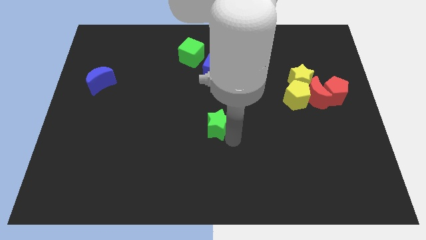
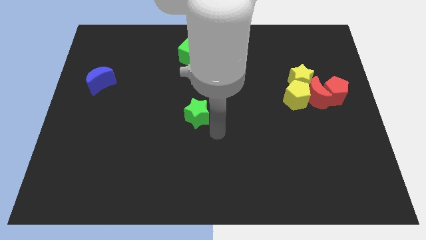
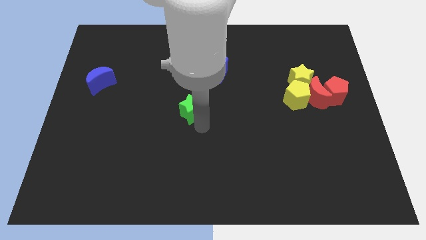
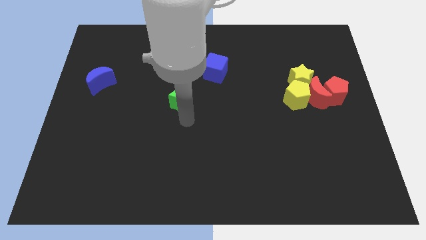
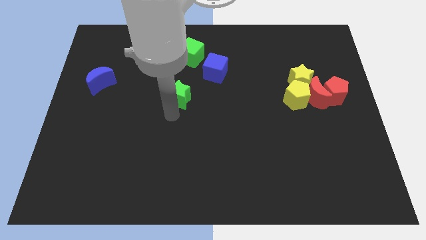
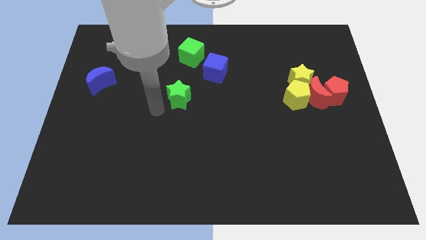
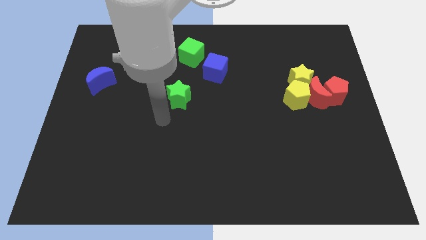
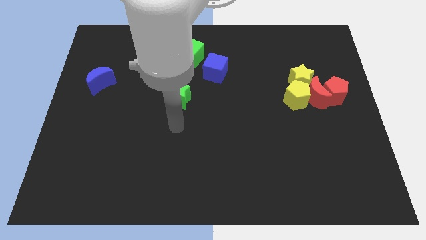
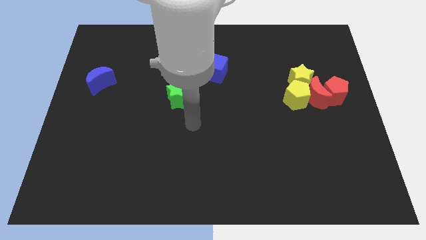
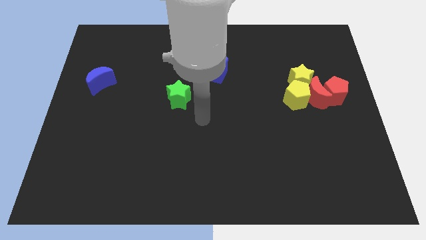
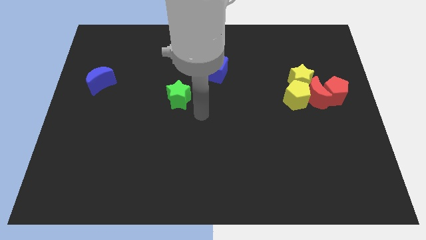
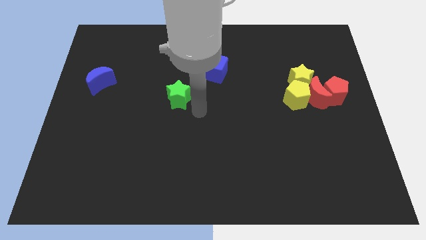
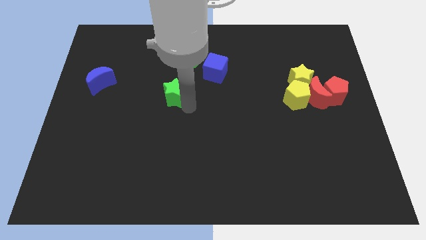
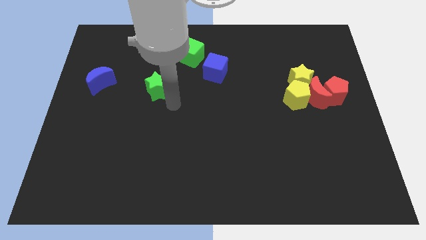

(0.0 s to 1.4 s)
move the green star to the green cube

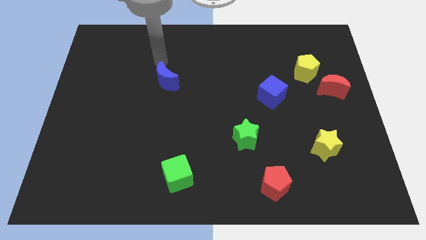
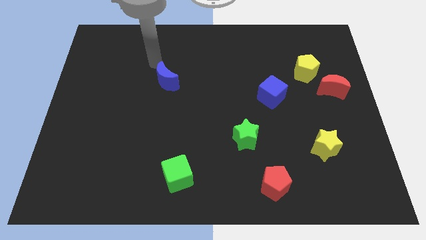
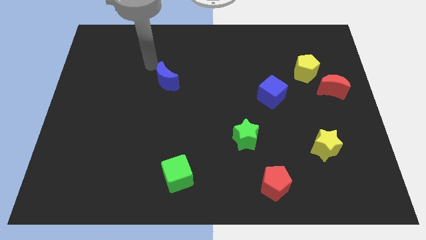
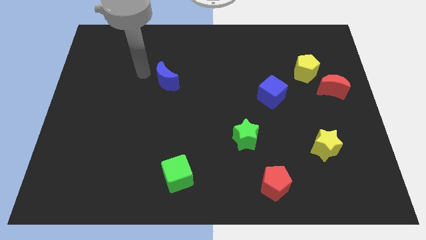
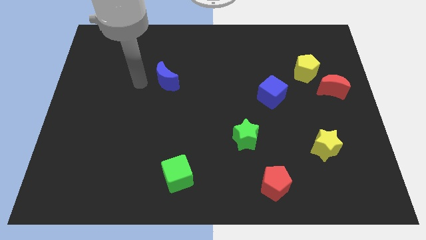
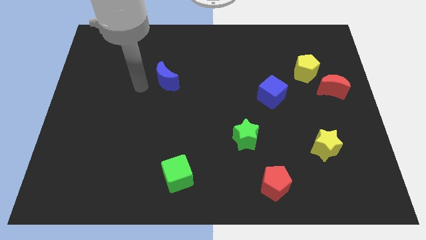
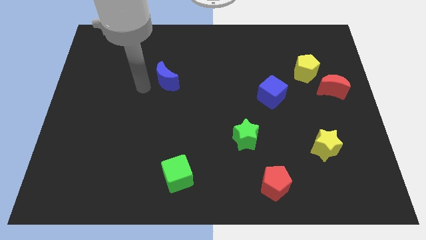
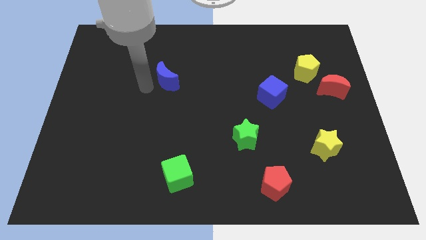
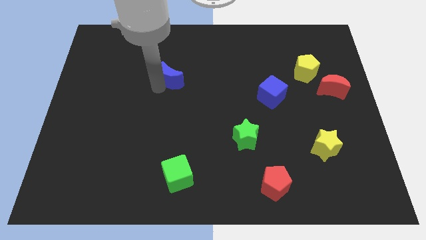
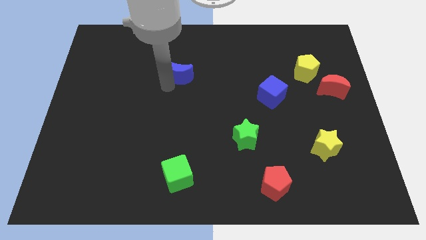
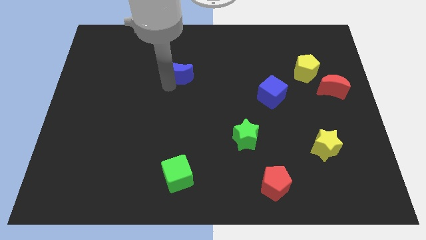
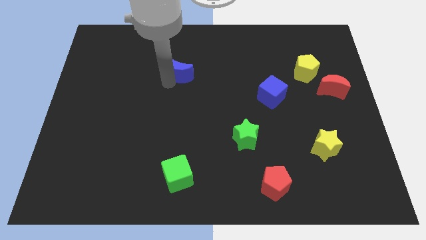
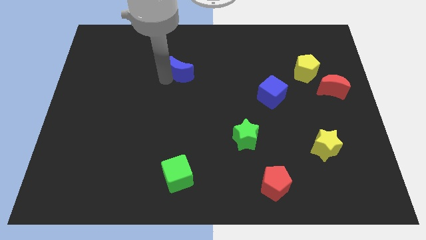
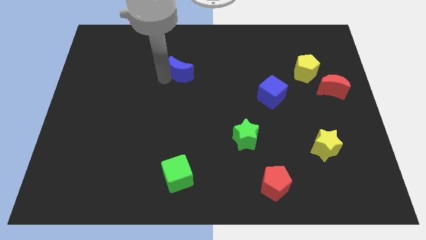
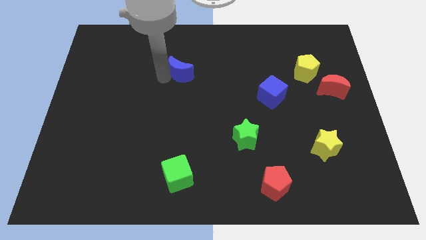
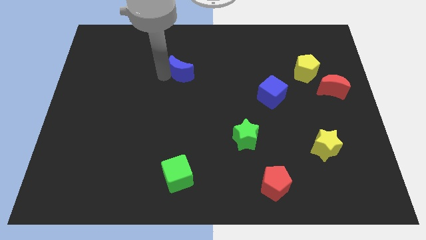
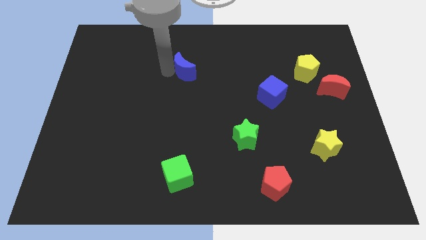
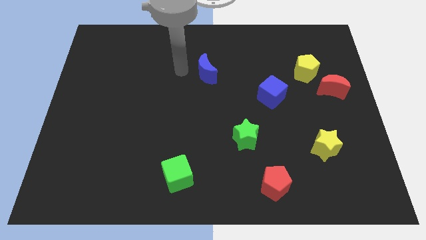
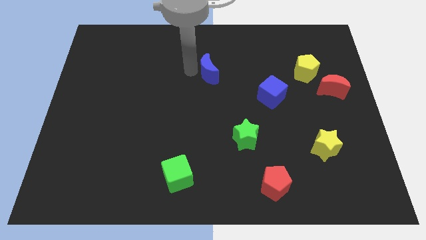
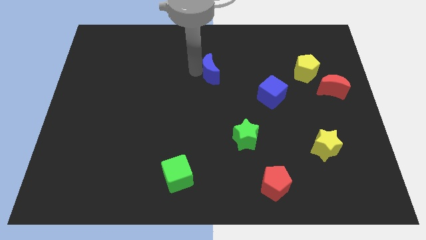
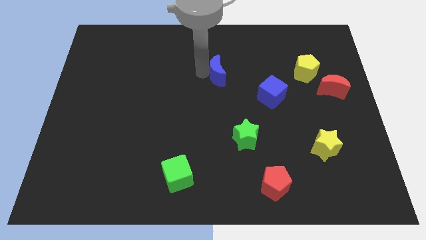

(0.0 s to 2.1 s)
move the blue crescent to the right of the board

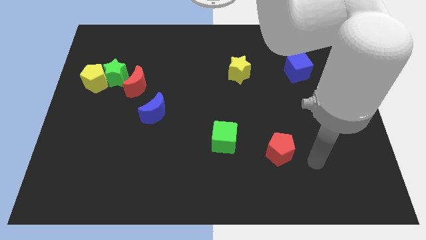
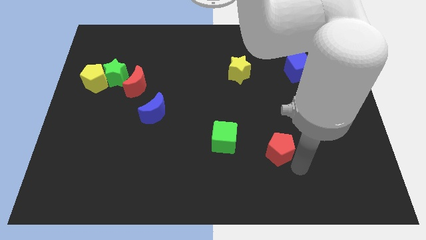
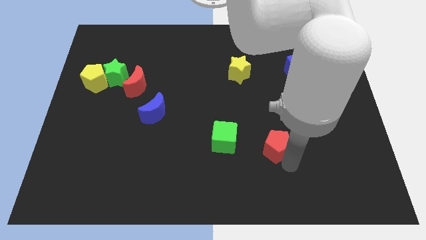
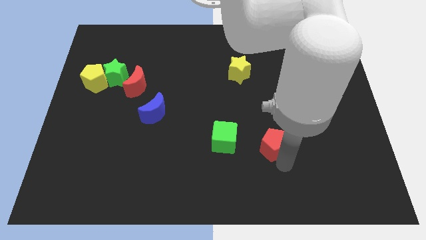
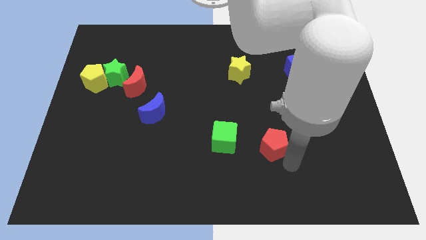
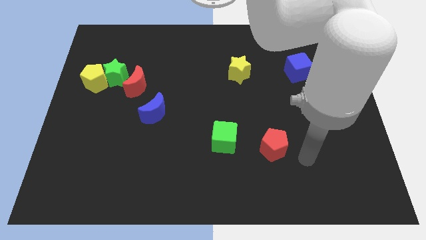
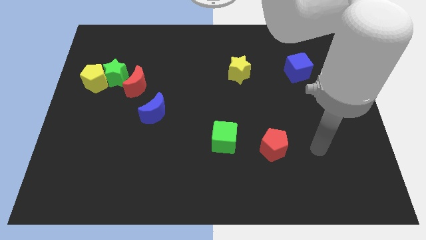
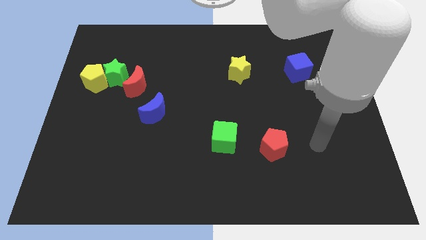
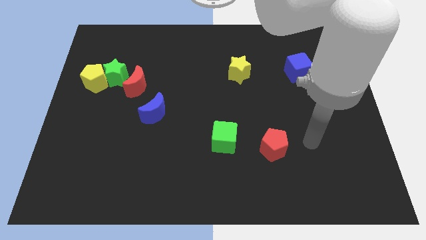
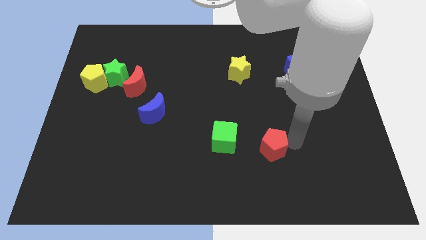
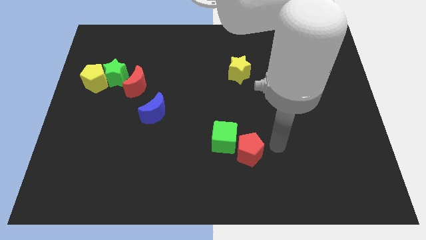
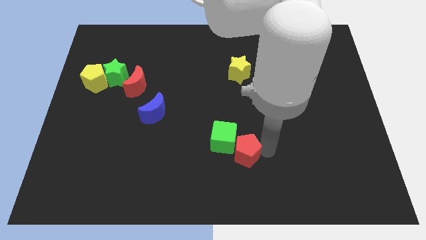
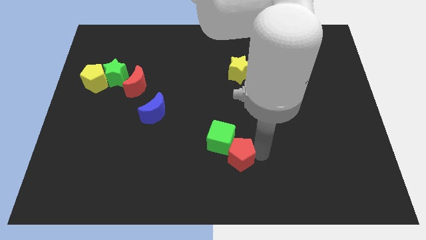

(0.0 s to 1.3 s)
slide the red pentagon close to the green cube

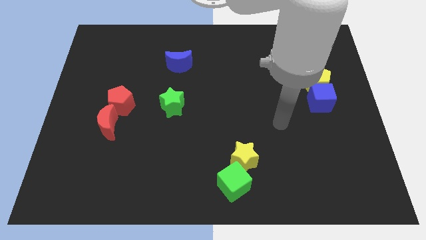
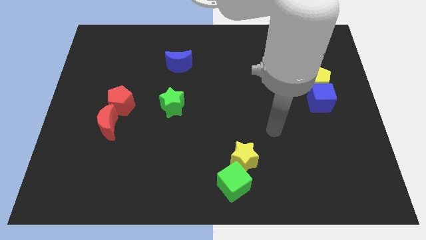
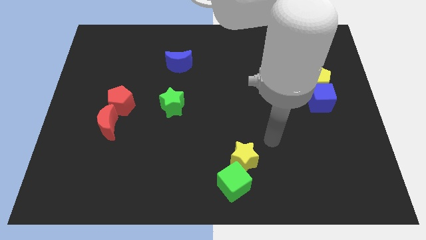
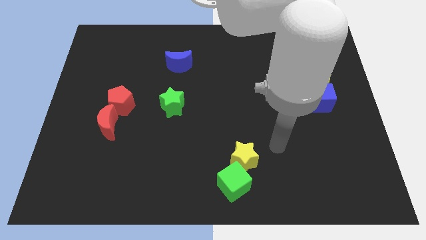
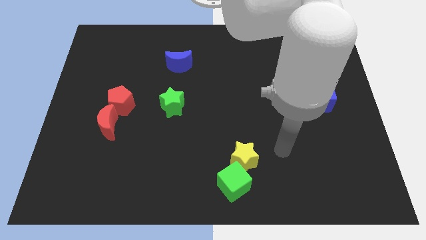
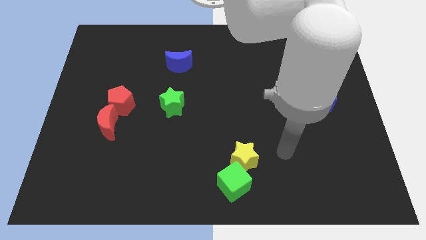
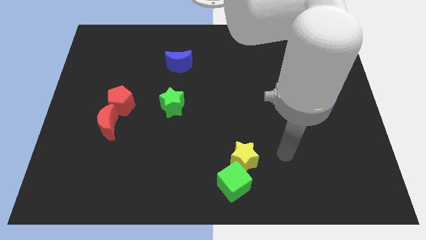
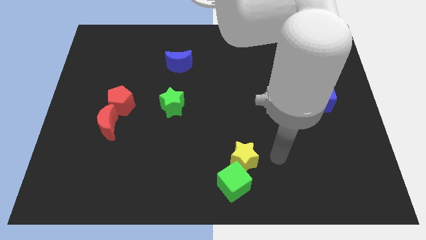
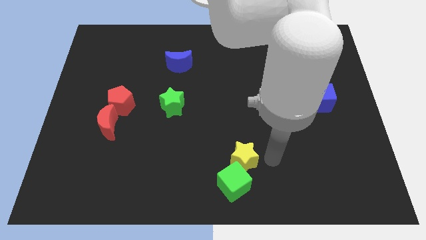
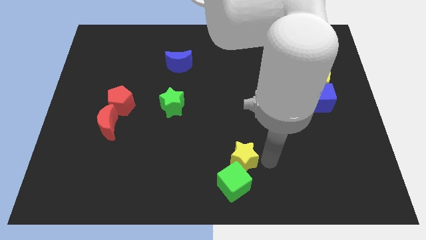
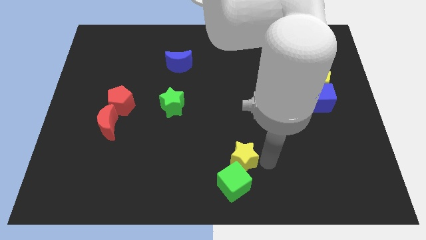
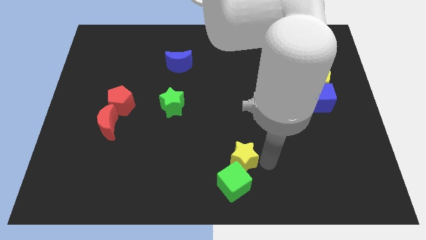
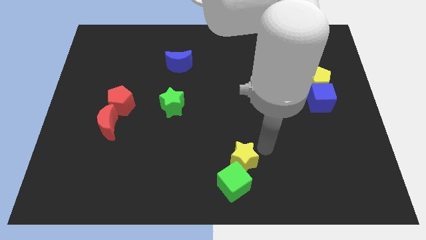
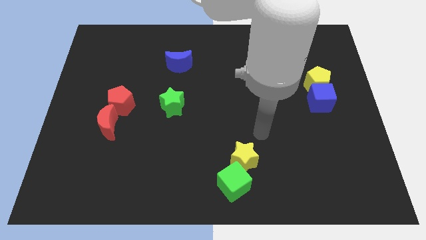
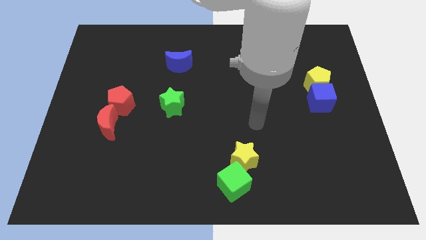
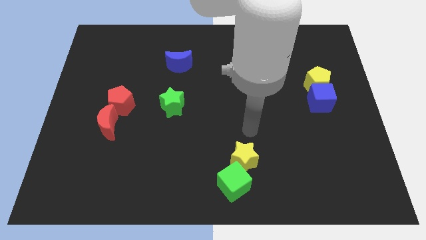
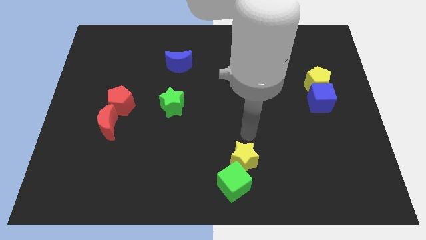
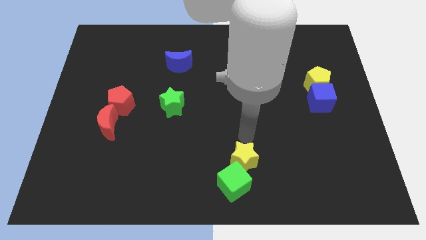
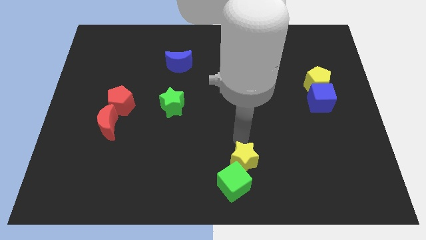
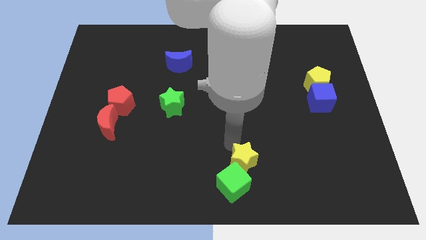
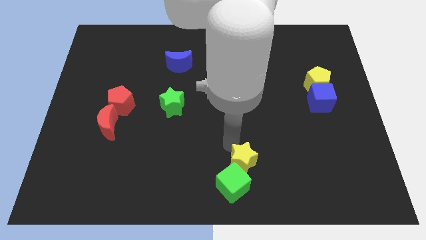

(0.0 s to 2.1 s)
tap the yellow star

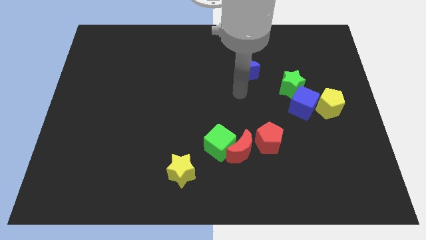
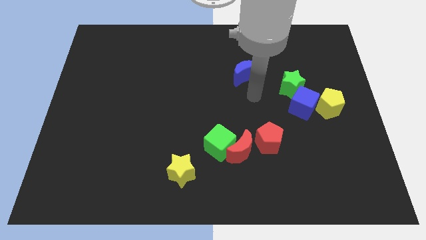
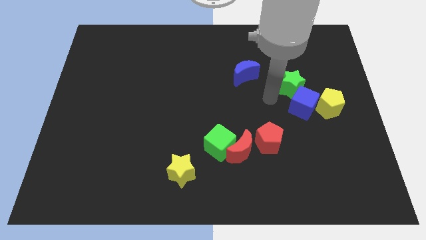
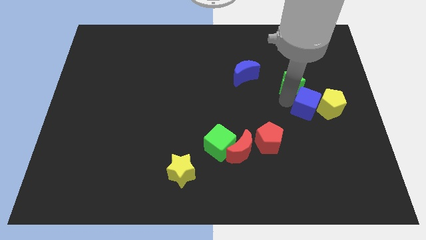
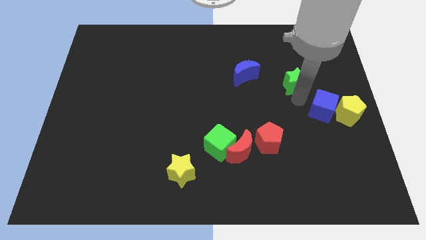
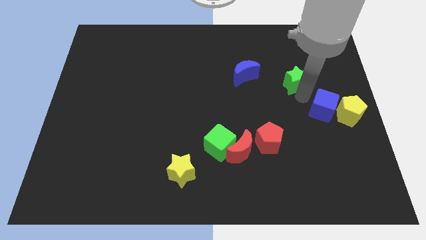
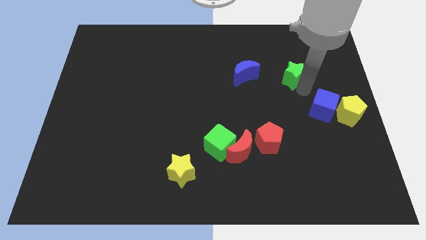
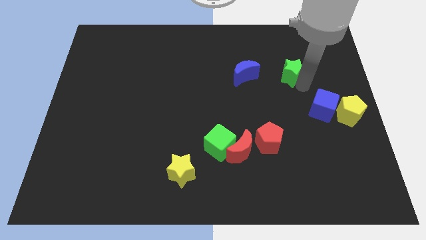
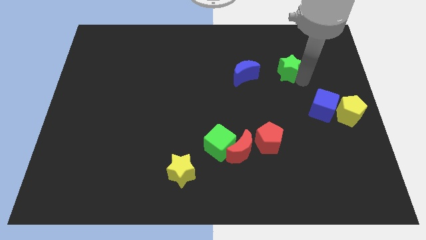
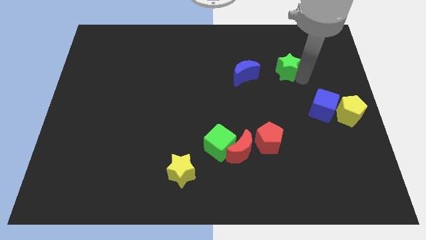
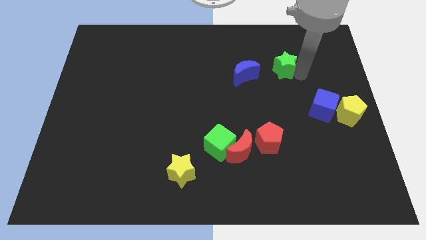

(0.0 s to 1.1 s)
place the green star to the right of the blue crescent

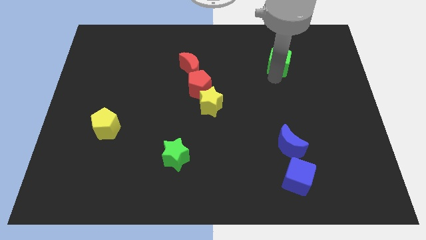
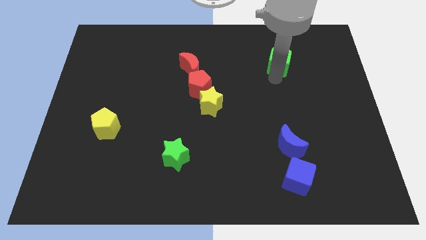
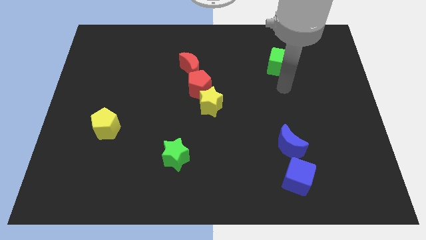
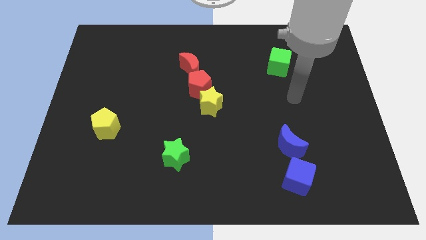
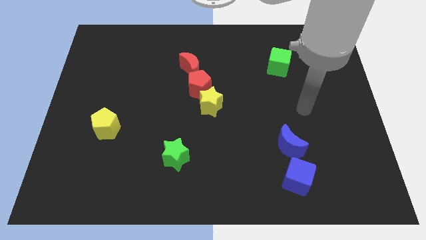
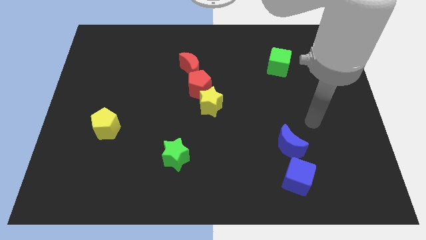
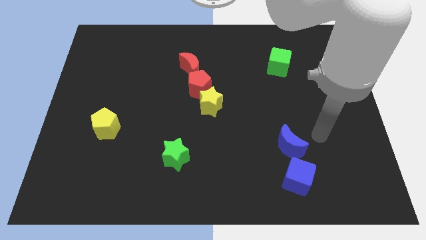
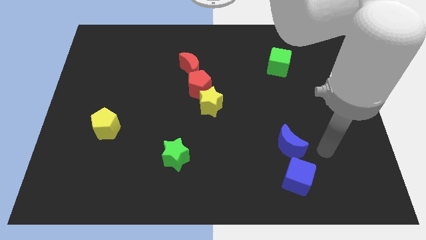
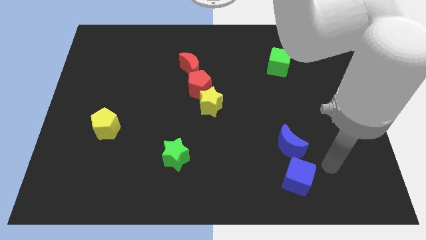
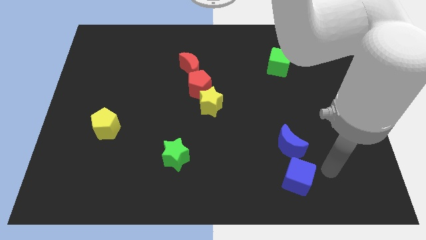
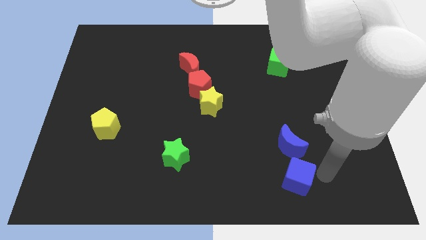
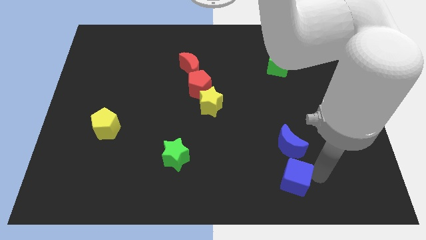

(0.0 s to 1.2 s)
place your arm into the blue cube
